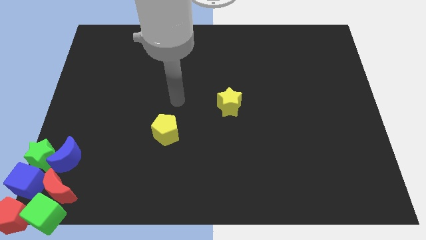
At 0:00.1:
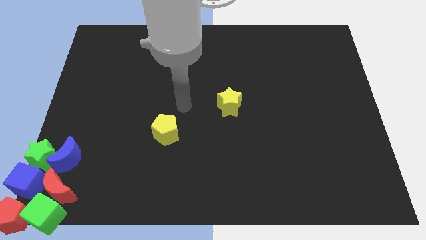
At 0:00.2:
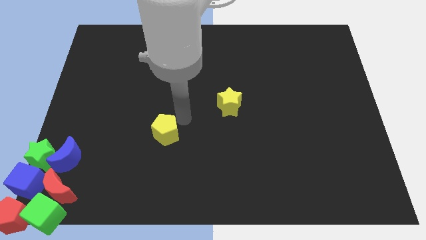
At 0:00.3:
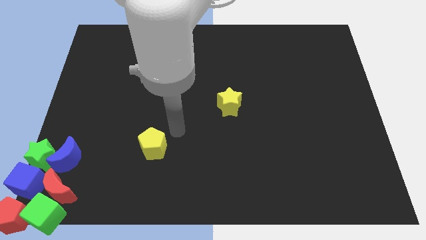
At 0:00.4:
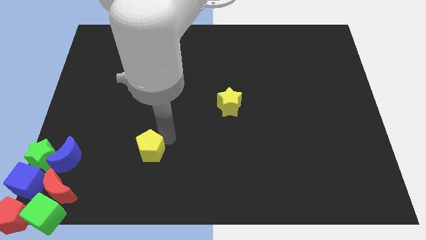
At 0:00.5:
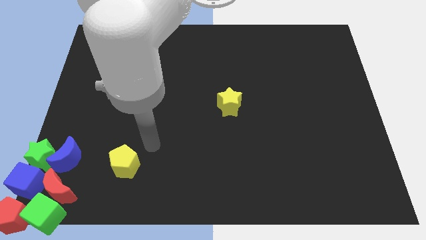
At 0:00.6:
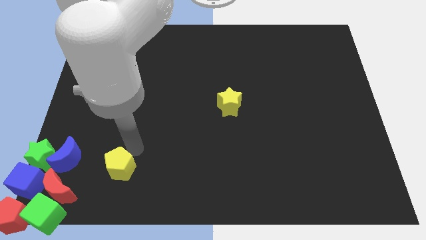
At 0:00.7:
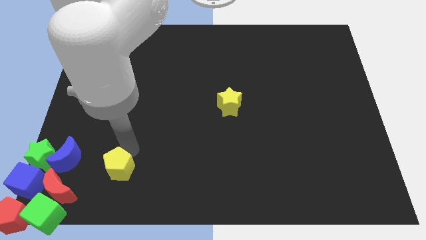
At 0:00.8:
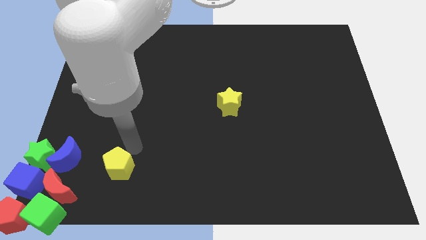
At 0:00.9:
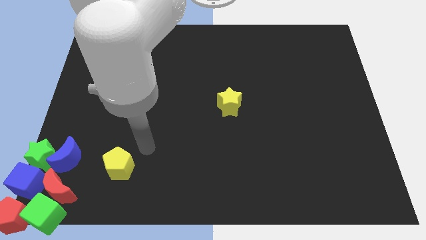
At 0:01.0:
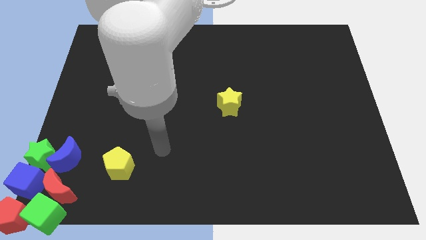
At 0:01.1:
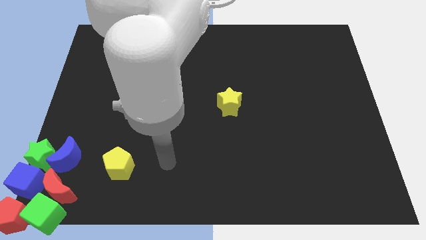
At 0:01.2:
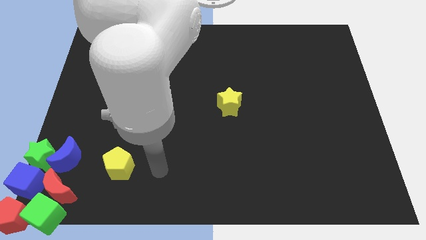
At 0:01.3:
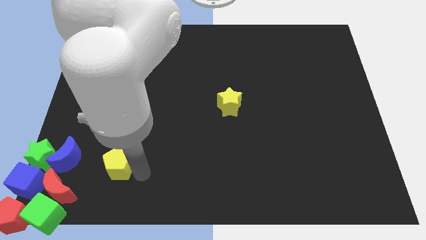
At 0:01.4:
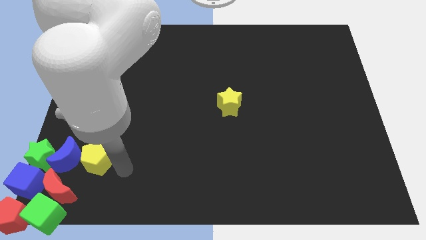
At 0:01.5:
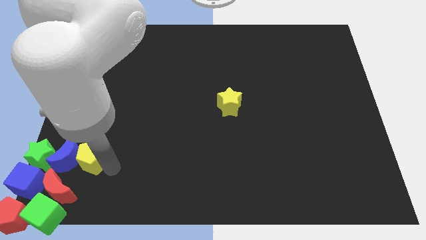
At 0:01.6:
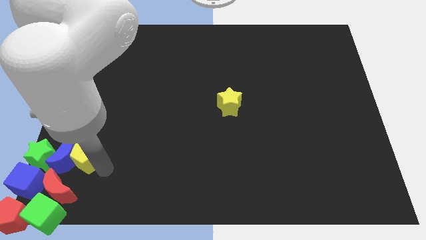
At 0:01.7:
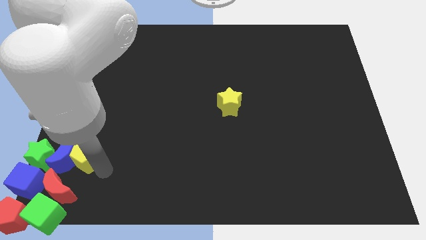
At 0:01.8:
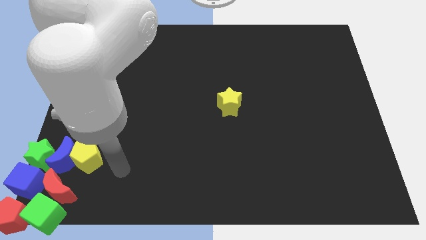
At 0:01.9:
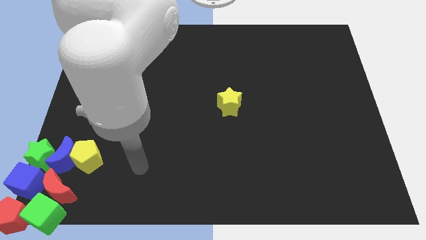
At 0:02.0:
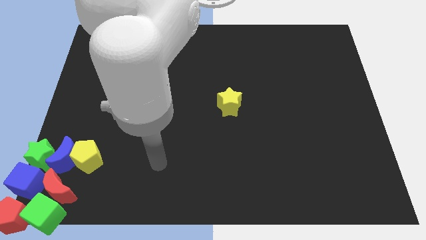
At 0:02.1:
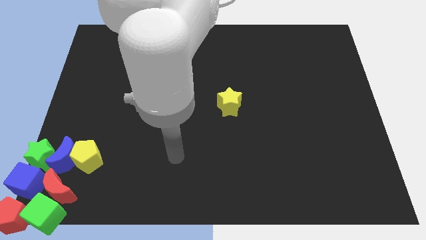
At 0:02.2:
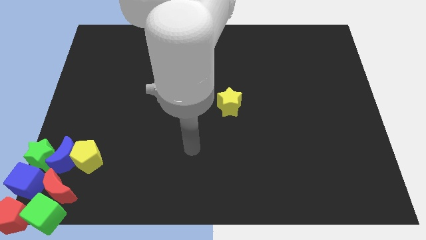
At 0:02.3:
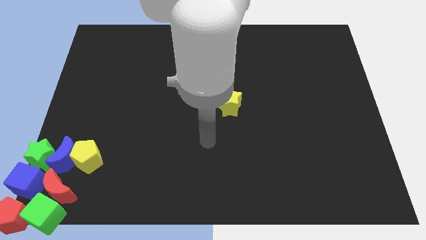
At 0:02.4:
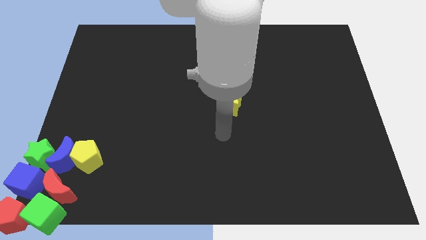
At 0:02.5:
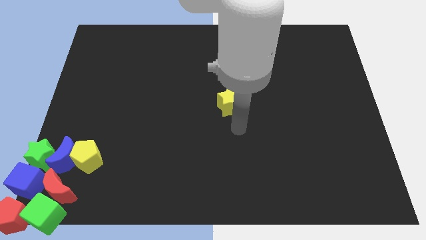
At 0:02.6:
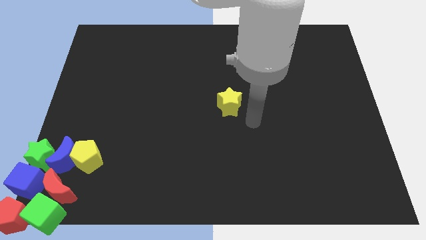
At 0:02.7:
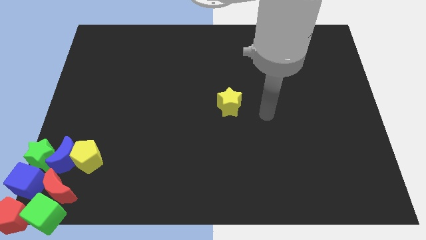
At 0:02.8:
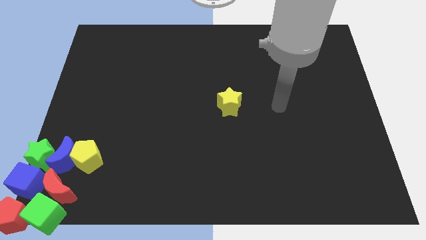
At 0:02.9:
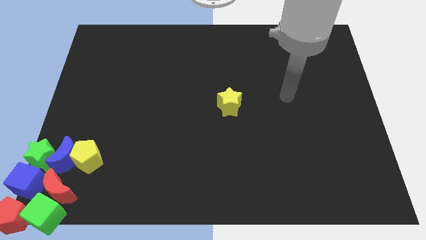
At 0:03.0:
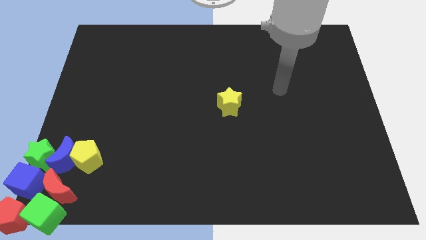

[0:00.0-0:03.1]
move the yellow pentagon into the right side of the blue moon

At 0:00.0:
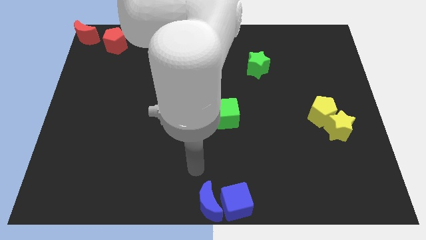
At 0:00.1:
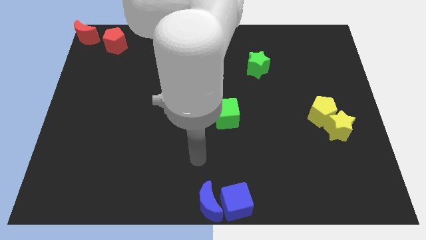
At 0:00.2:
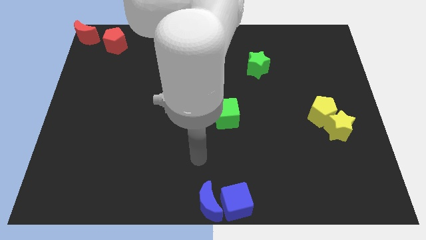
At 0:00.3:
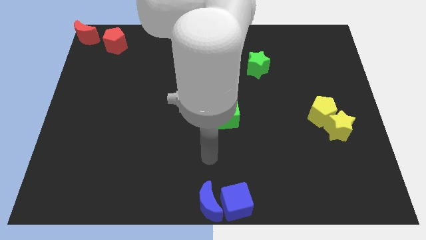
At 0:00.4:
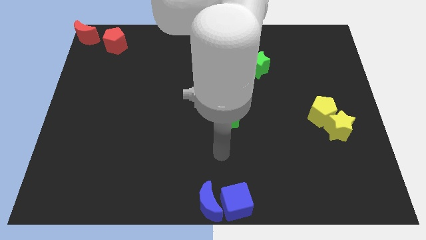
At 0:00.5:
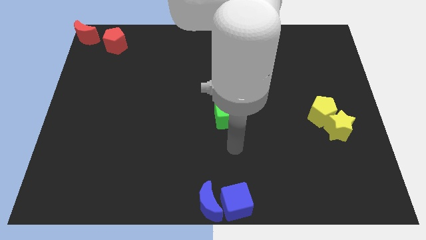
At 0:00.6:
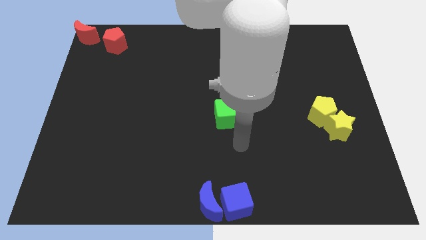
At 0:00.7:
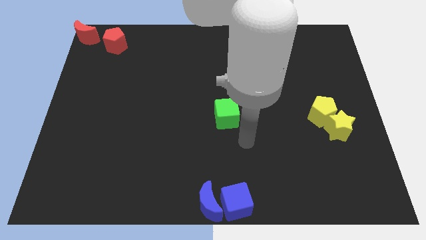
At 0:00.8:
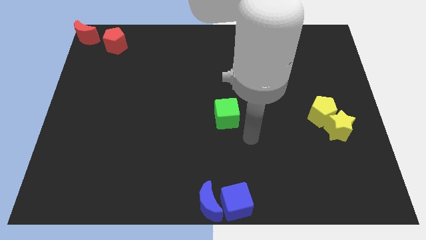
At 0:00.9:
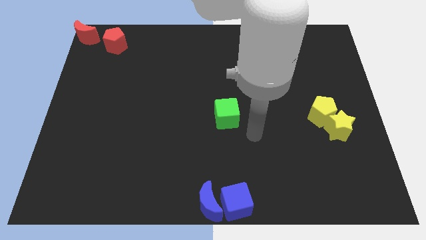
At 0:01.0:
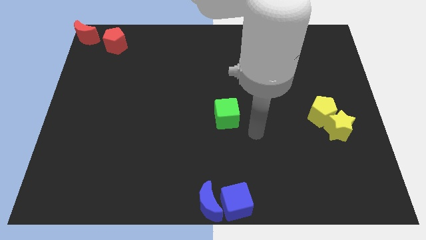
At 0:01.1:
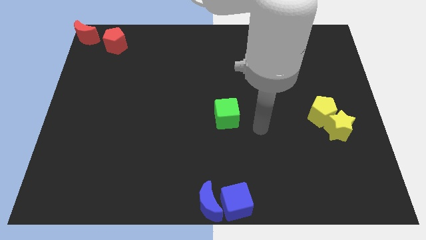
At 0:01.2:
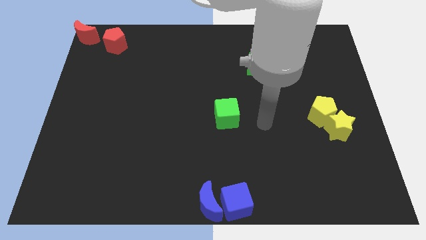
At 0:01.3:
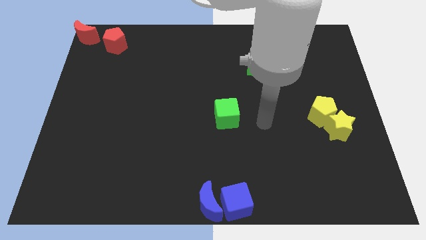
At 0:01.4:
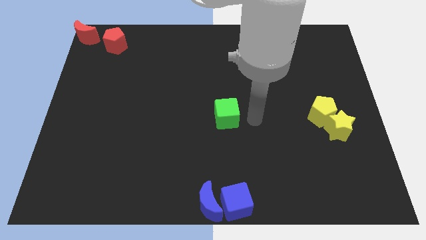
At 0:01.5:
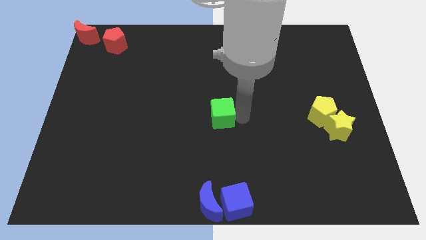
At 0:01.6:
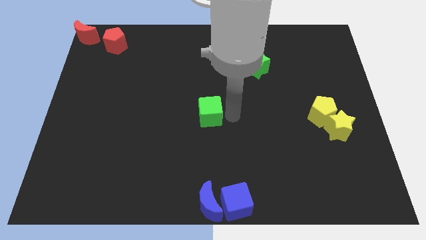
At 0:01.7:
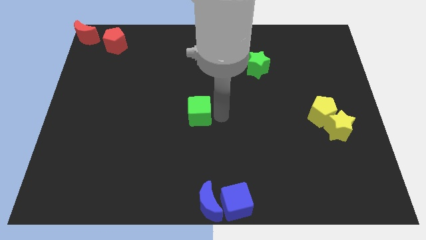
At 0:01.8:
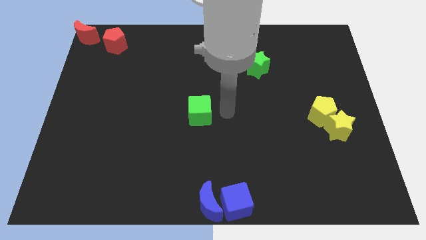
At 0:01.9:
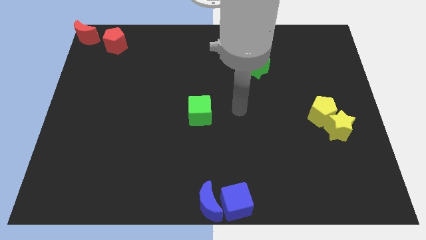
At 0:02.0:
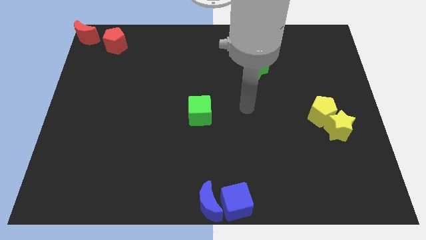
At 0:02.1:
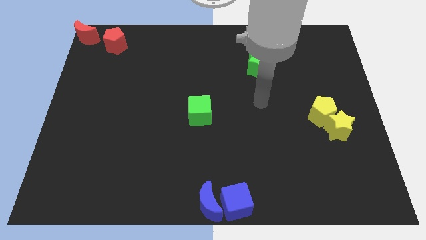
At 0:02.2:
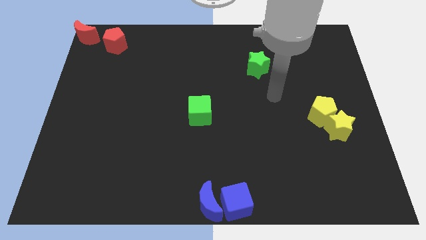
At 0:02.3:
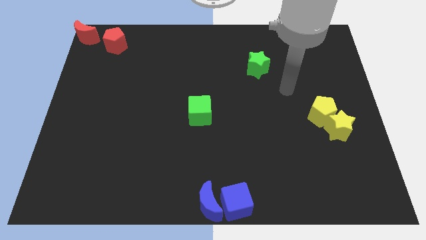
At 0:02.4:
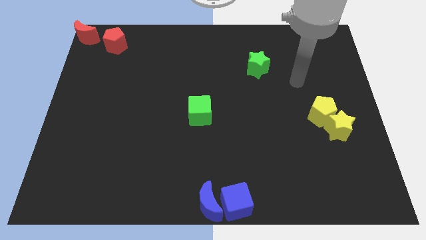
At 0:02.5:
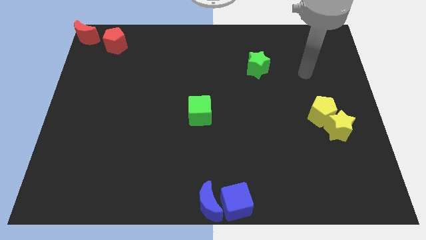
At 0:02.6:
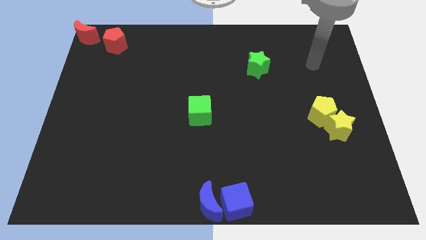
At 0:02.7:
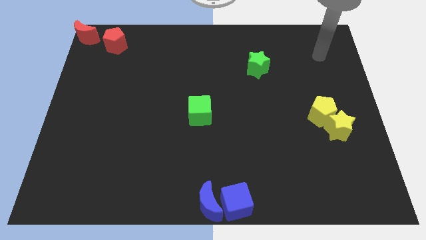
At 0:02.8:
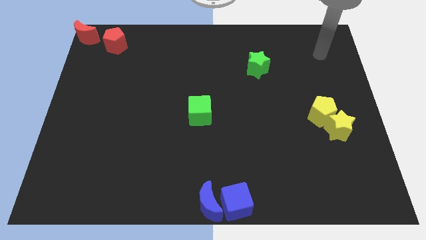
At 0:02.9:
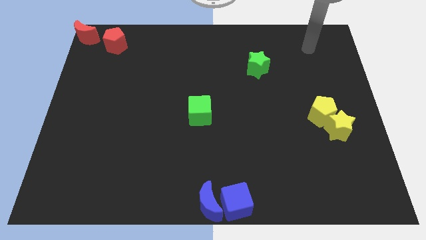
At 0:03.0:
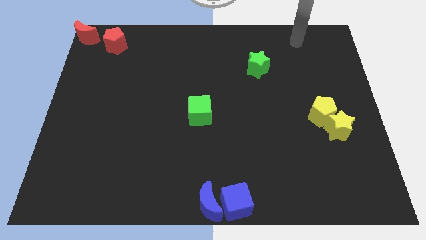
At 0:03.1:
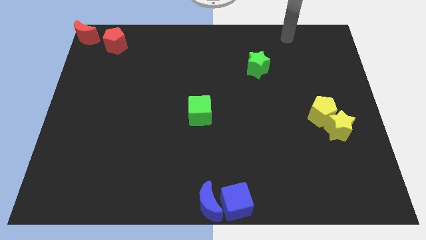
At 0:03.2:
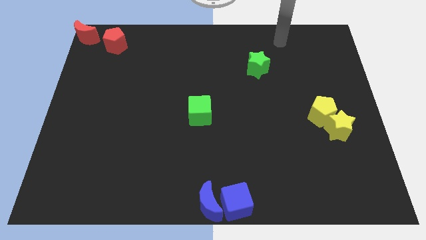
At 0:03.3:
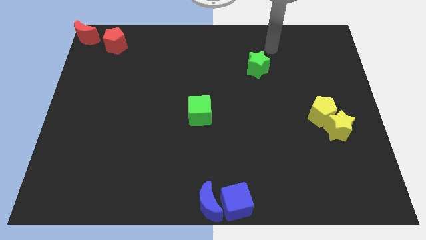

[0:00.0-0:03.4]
push the green cube to the center of the board

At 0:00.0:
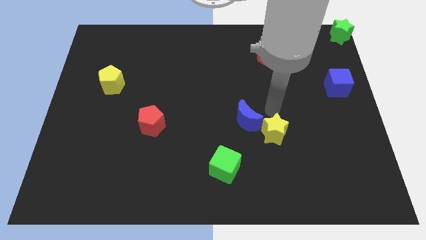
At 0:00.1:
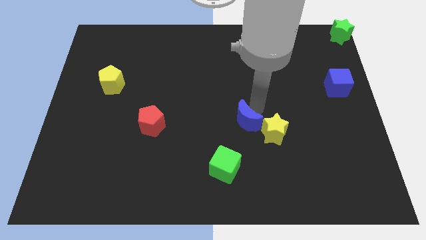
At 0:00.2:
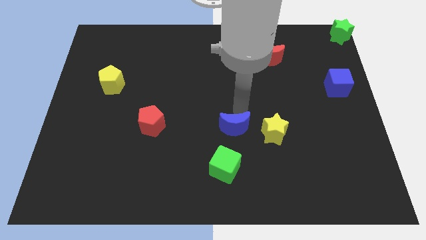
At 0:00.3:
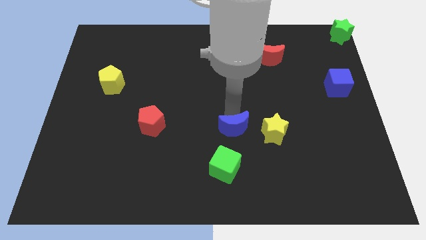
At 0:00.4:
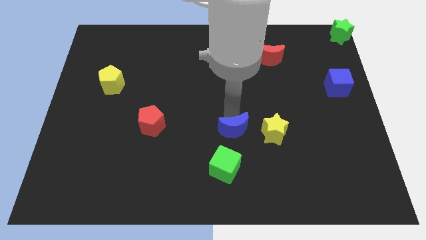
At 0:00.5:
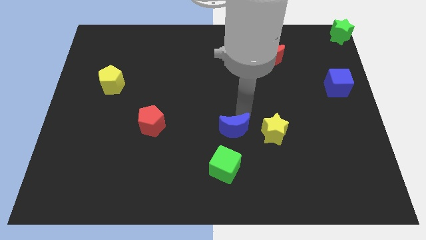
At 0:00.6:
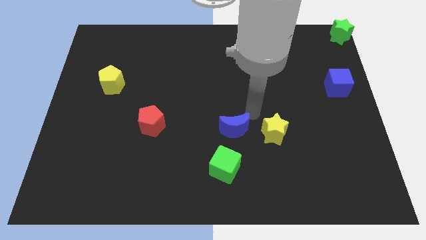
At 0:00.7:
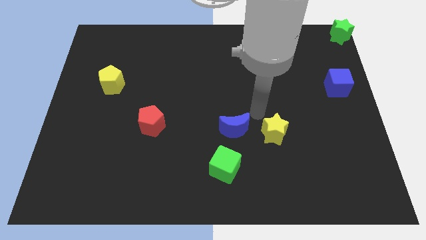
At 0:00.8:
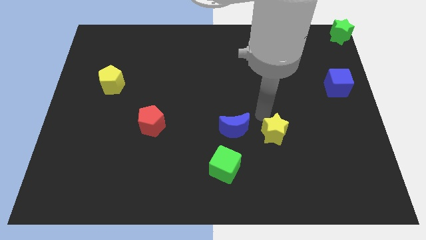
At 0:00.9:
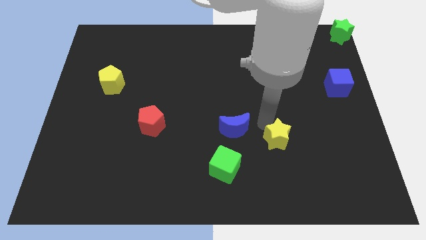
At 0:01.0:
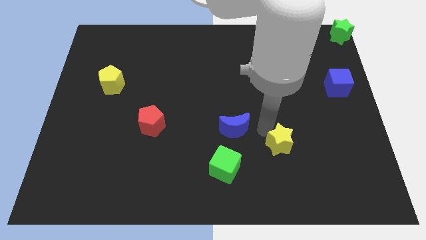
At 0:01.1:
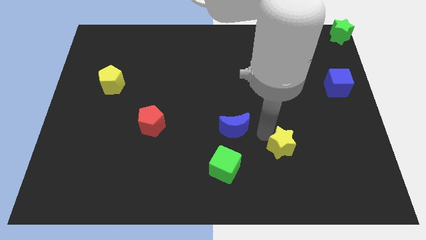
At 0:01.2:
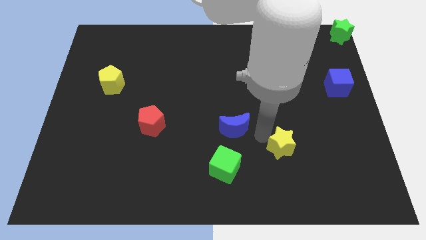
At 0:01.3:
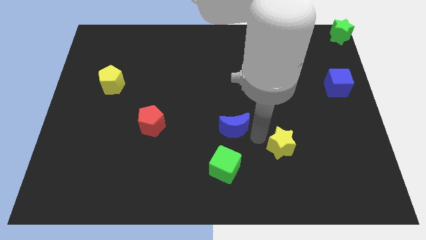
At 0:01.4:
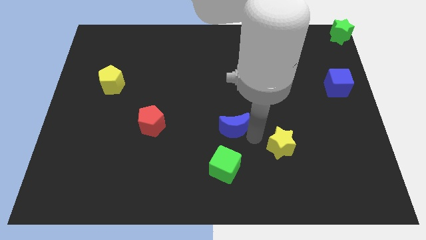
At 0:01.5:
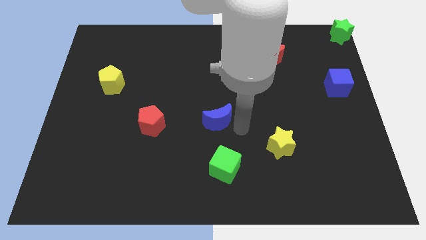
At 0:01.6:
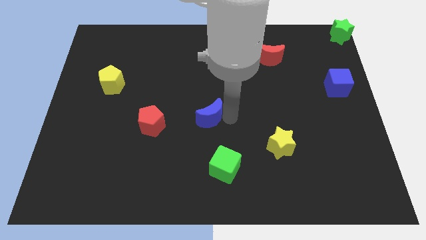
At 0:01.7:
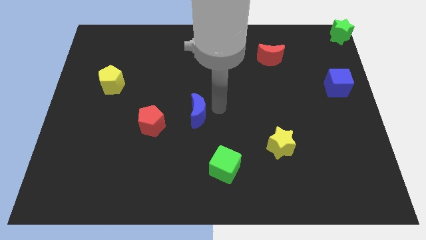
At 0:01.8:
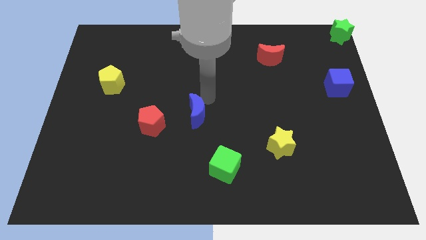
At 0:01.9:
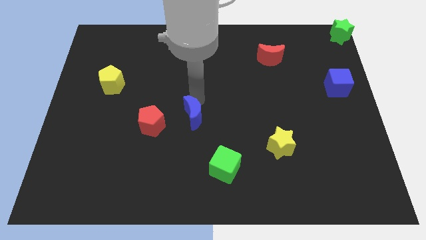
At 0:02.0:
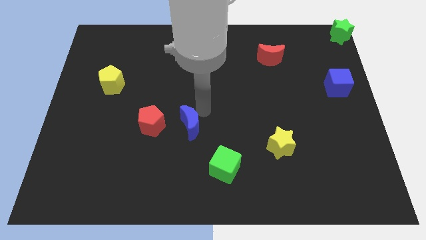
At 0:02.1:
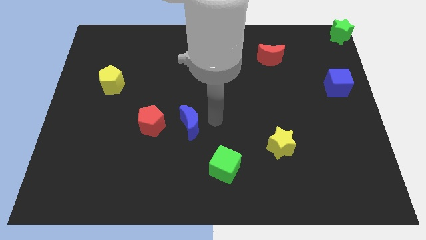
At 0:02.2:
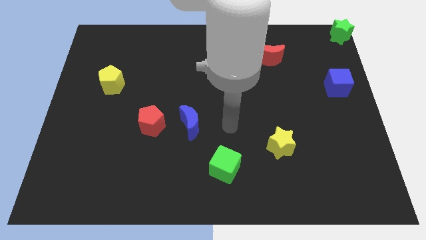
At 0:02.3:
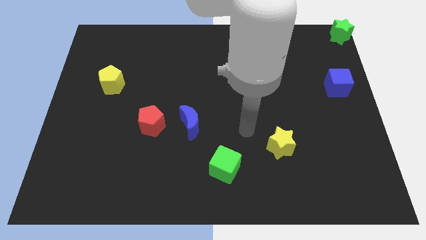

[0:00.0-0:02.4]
push the blue crescent towards the red pentagon
